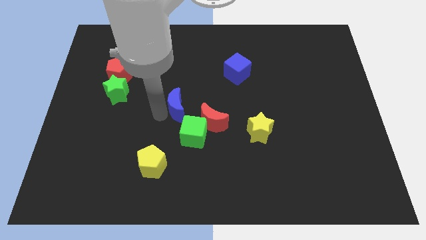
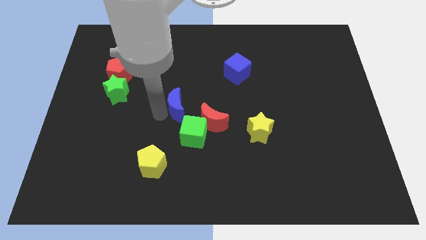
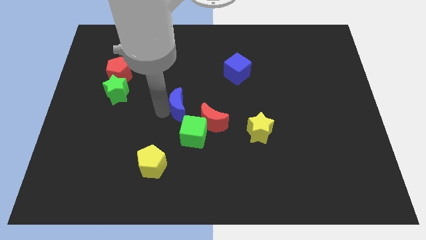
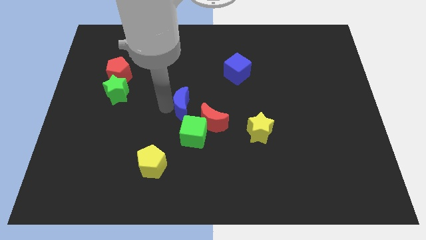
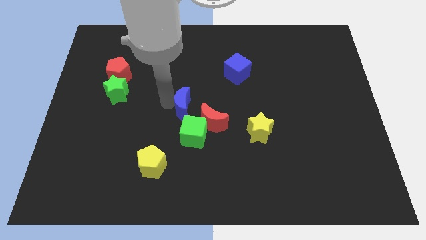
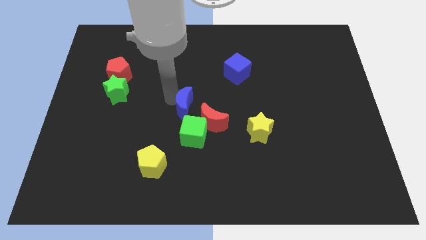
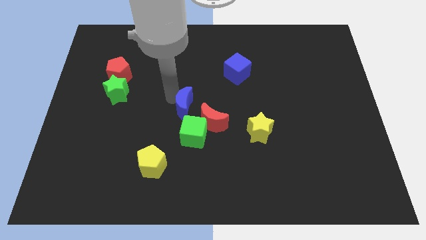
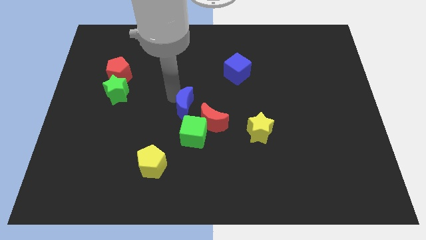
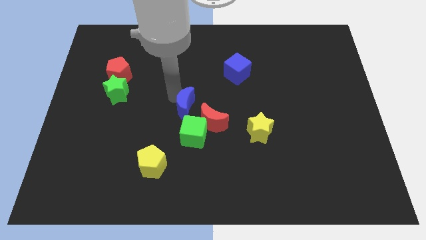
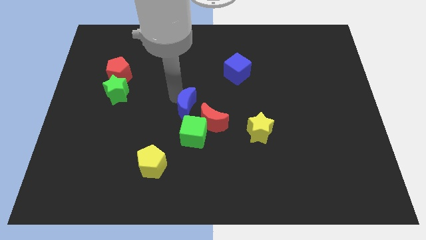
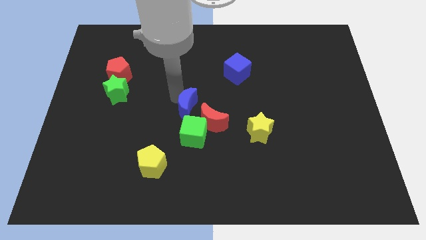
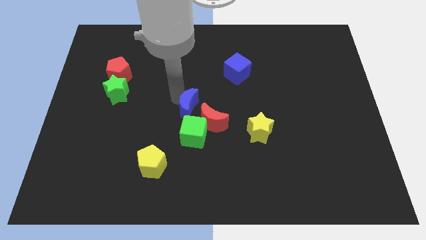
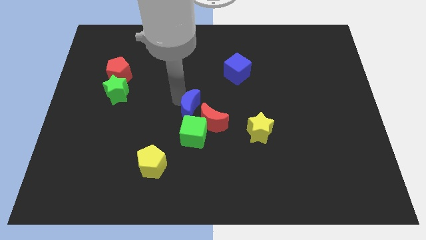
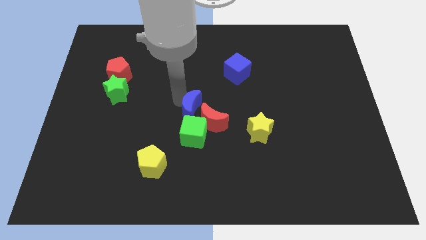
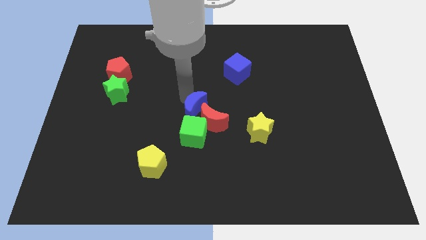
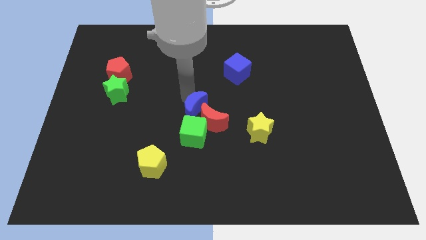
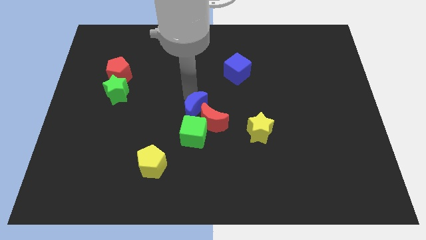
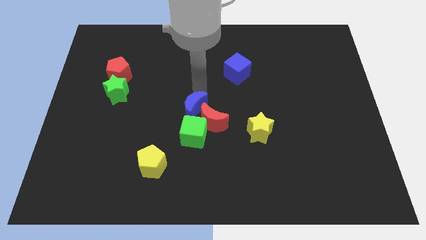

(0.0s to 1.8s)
push the blue crescent to the left of the red crescent

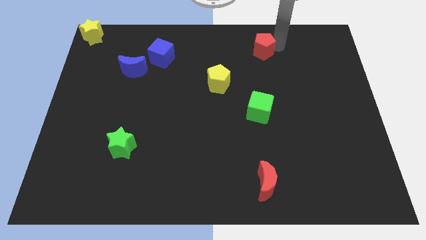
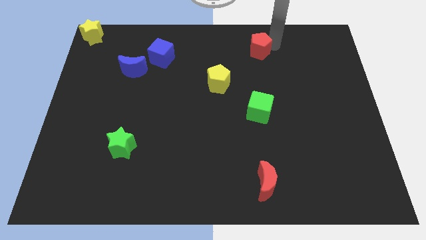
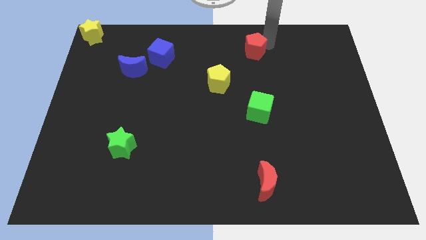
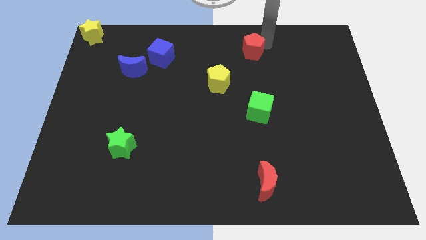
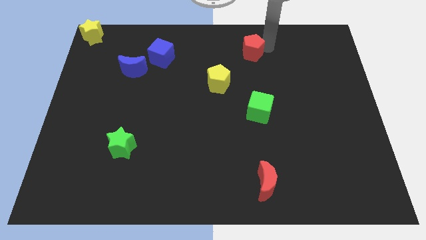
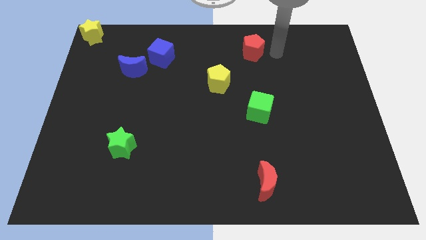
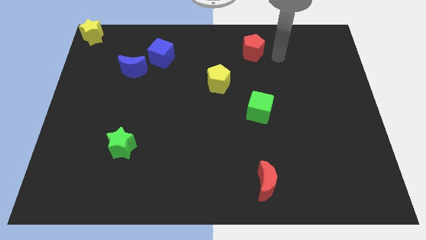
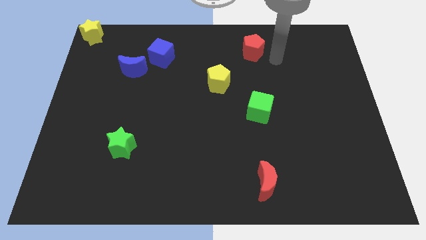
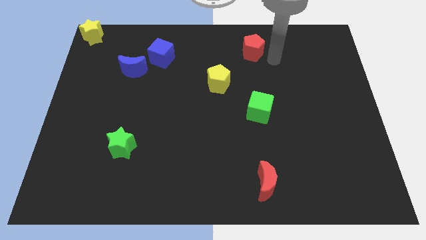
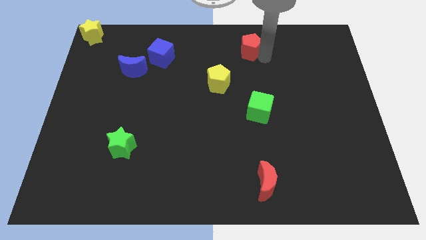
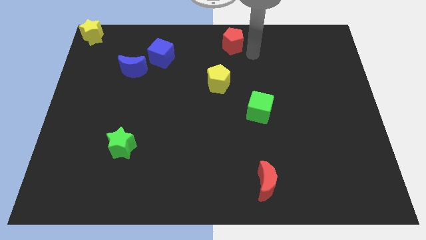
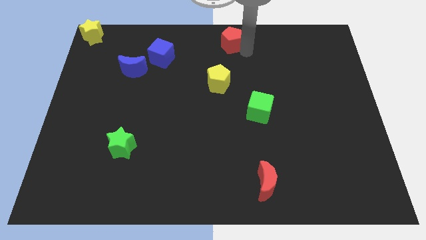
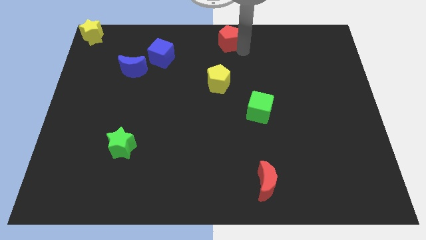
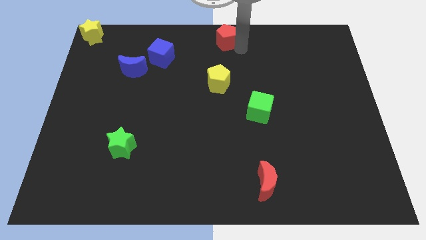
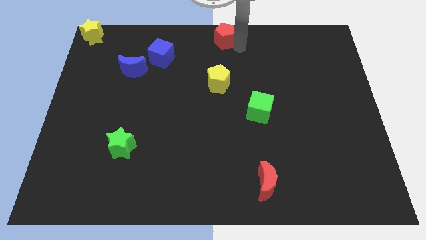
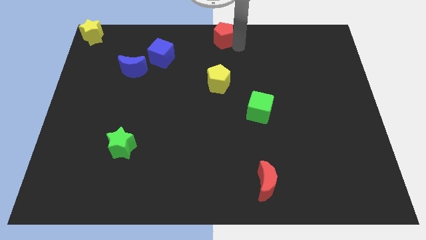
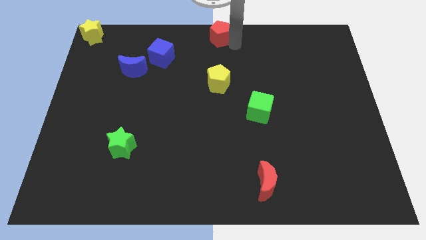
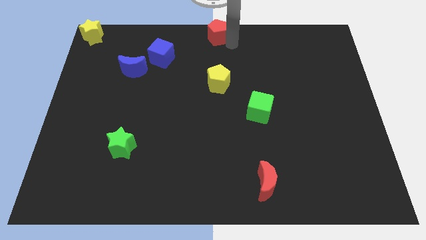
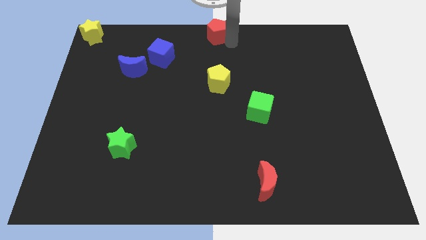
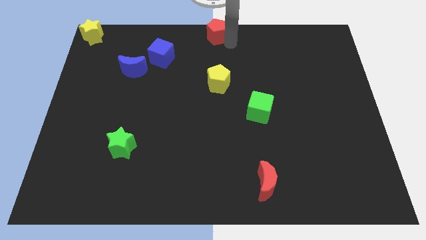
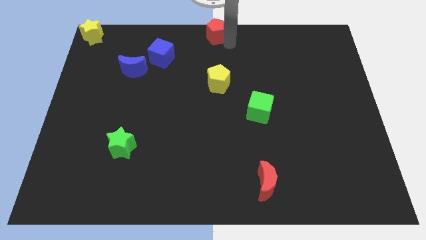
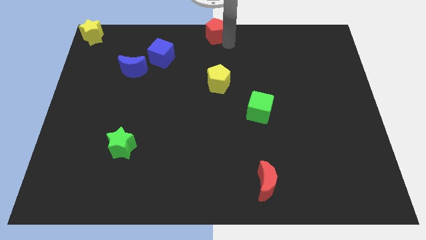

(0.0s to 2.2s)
move the red pentagon to the top centre of the board

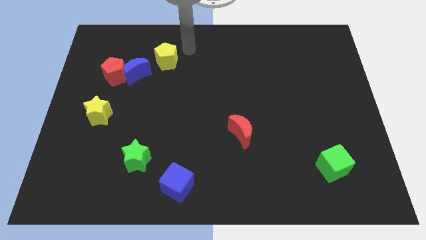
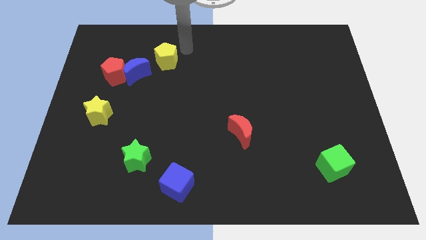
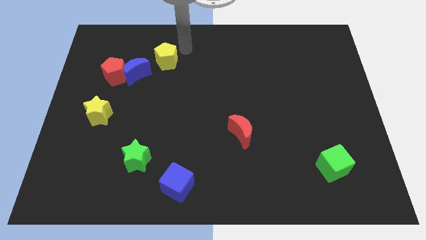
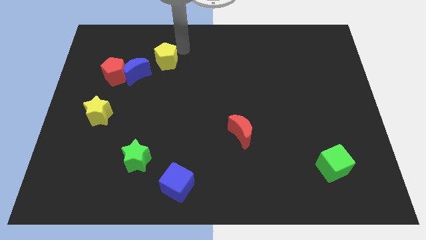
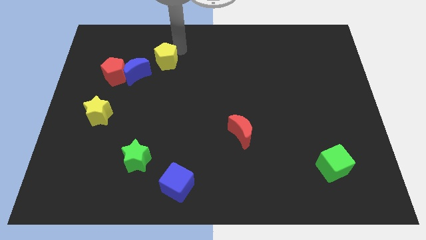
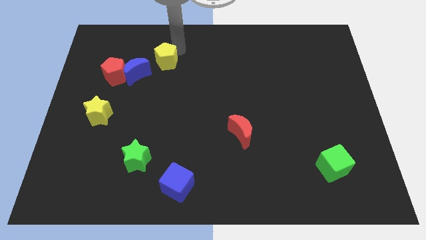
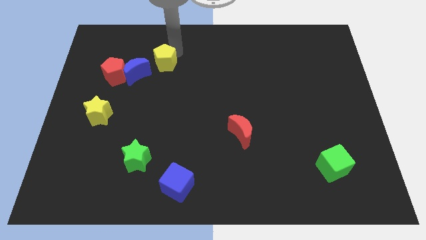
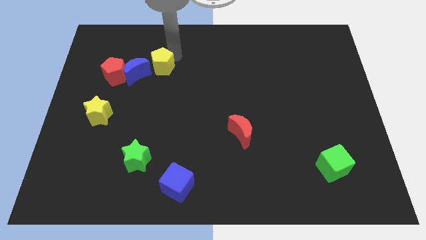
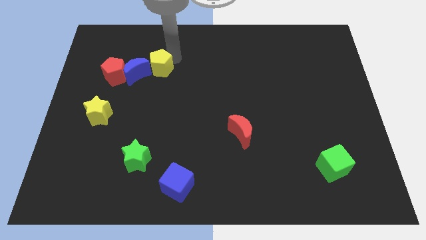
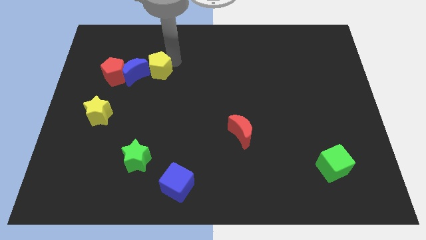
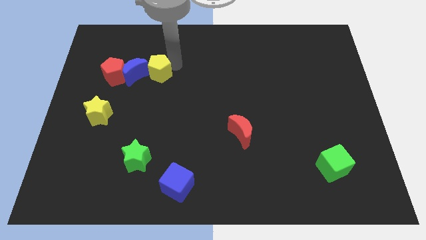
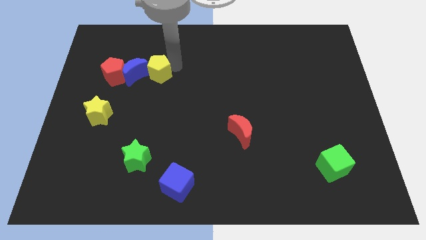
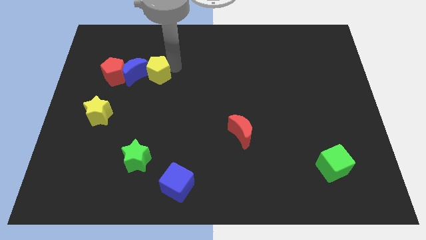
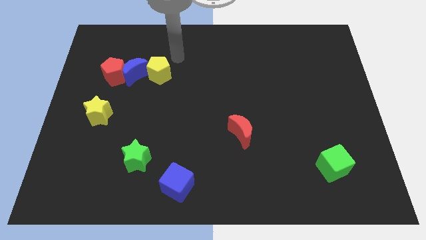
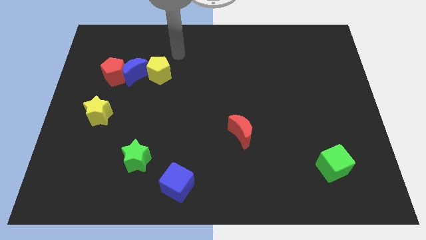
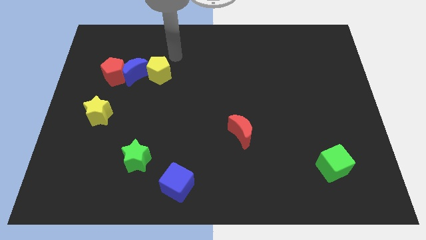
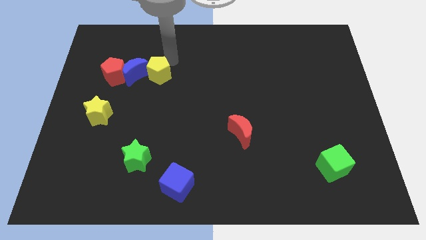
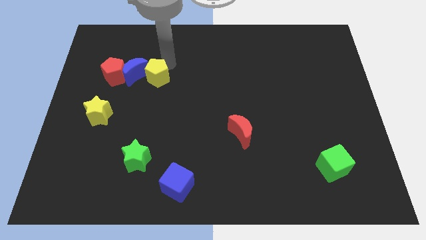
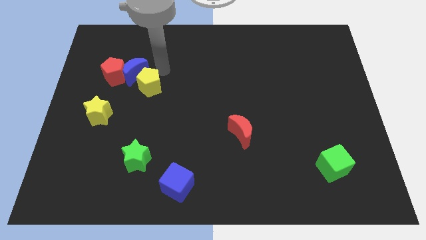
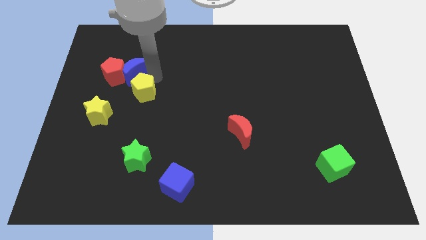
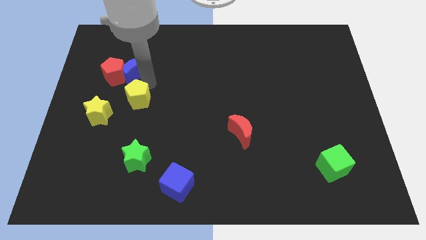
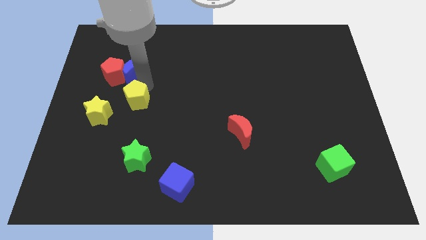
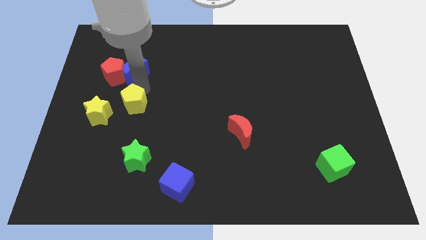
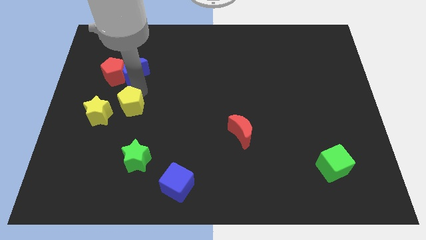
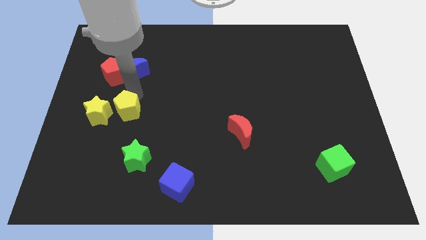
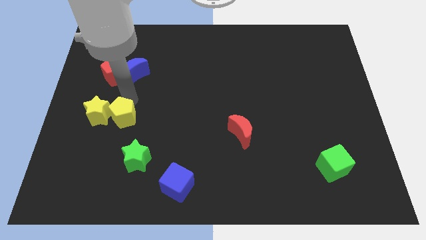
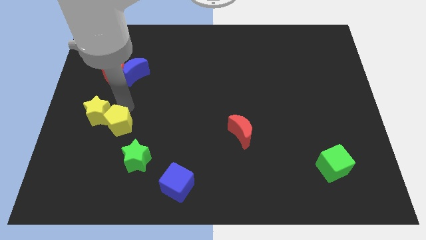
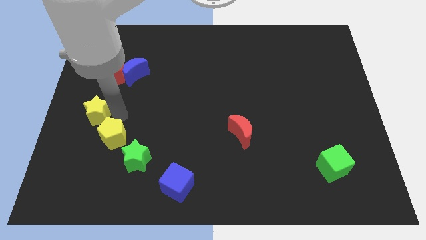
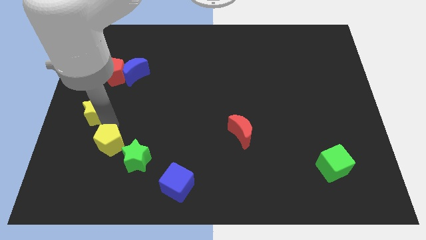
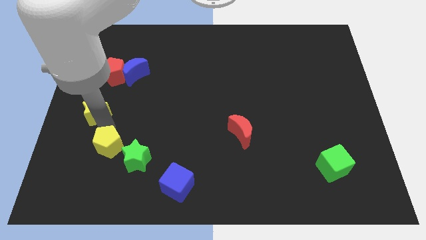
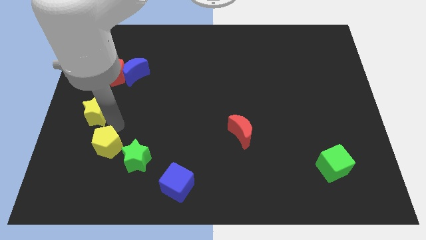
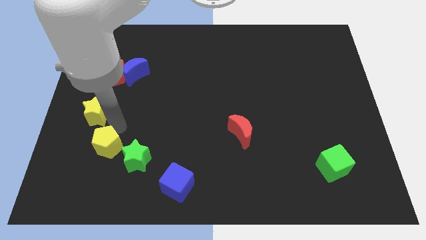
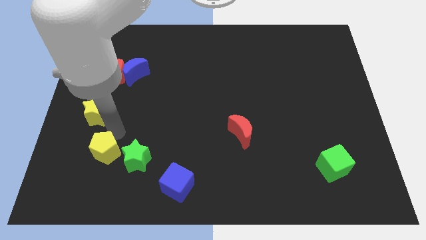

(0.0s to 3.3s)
place yellow pentagon to the bottom of yellow star

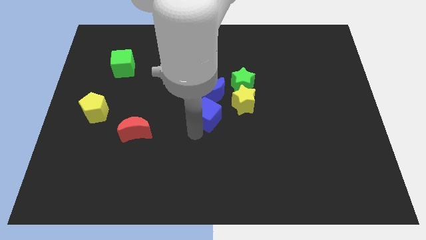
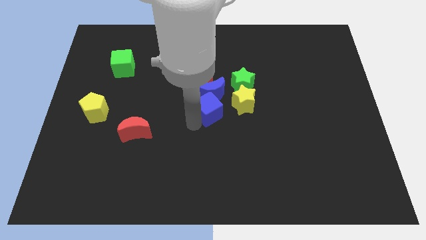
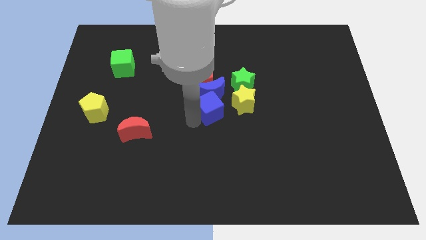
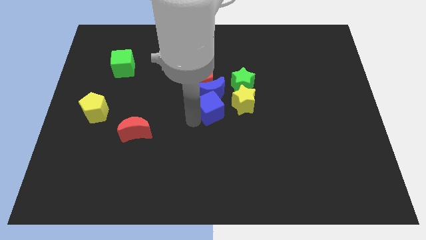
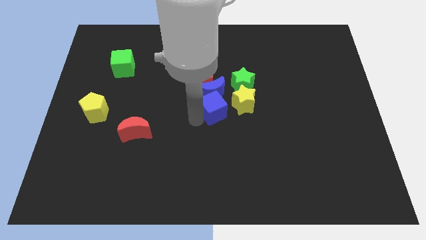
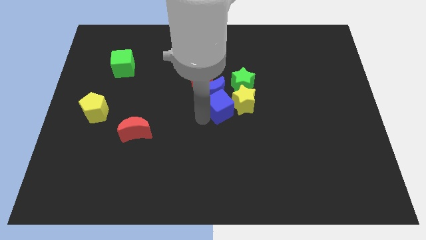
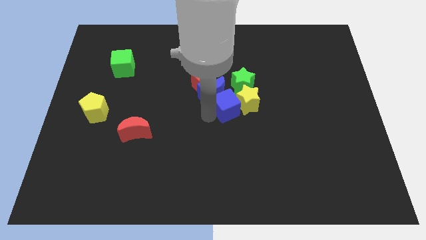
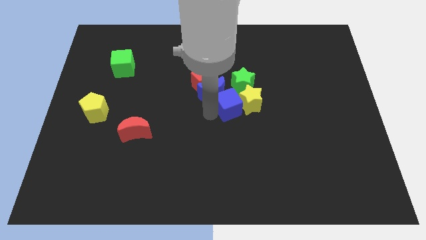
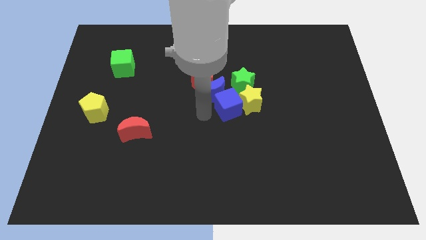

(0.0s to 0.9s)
push the blue cube to the left of the yellow star

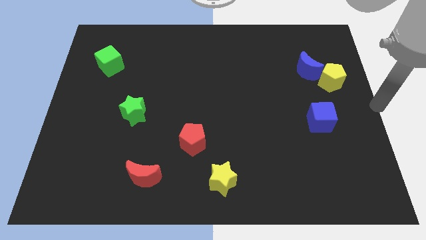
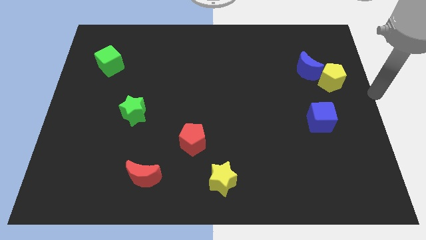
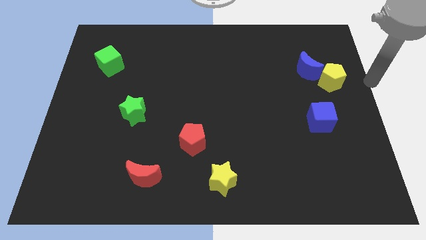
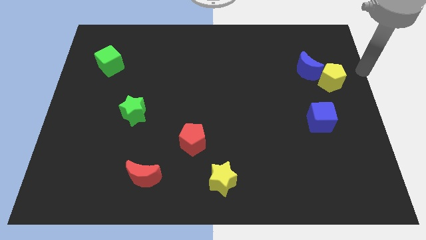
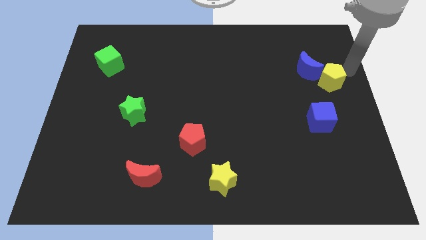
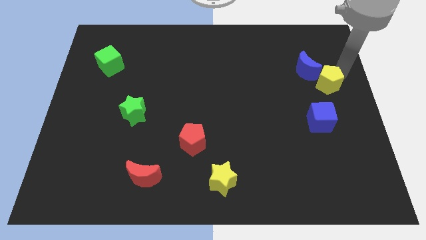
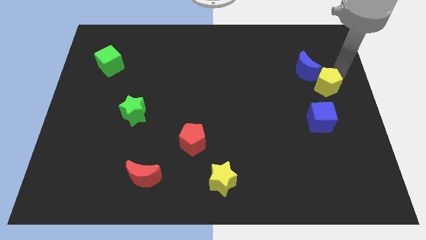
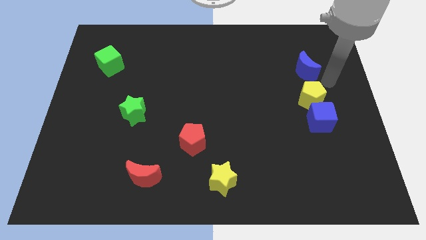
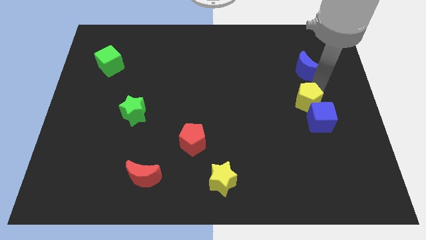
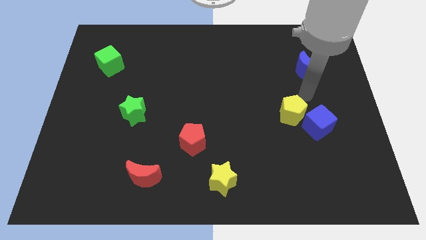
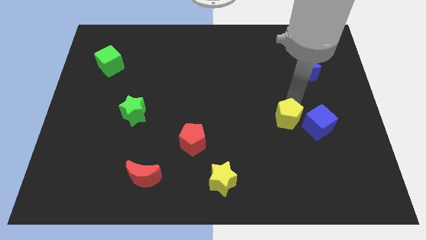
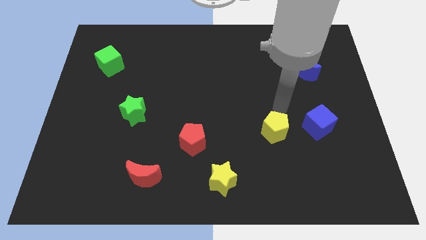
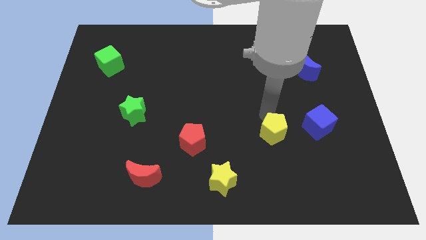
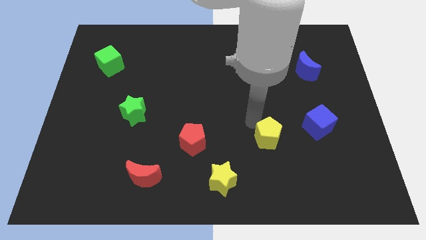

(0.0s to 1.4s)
place the yellow pentagon in between the red pentagon and blue cube
